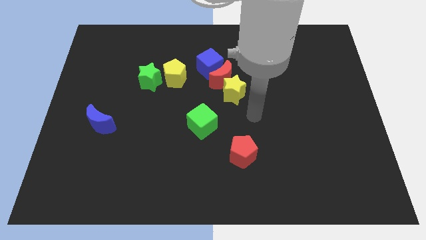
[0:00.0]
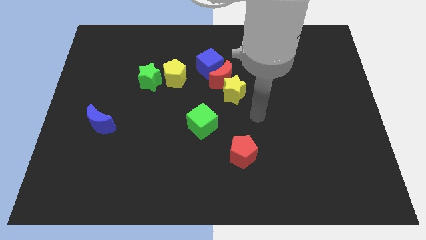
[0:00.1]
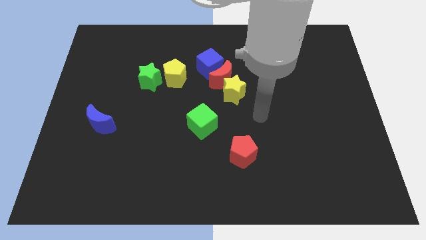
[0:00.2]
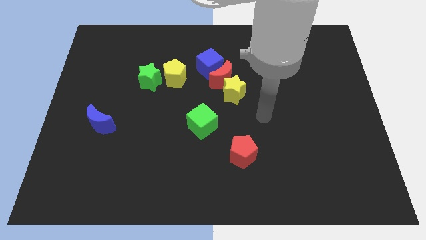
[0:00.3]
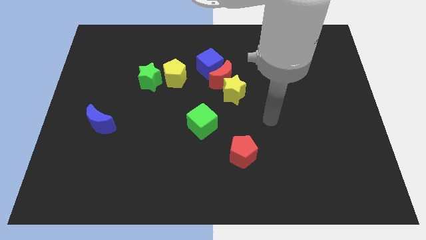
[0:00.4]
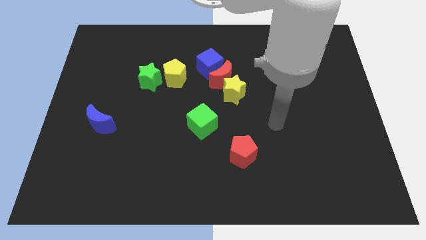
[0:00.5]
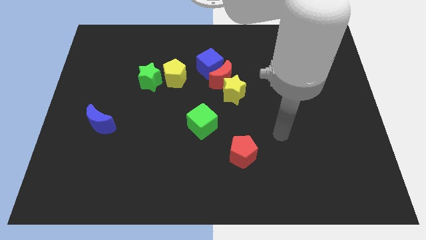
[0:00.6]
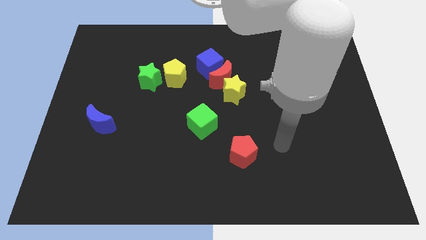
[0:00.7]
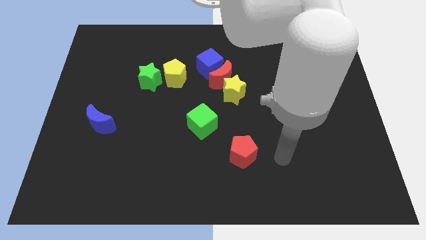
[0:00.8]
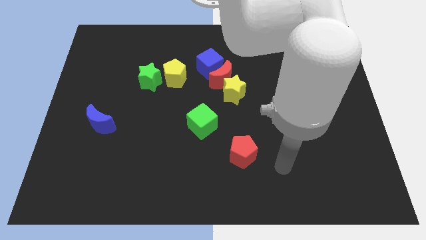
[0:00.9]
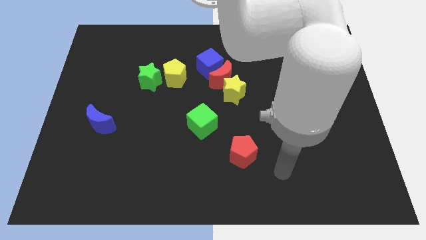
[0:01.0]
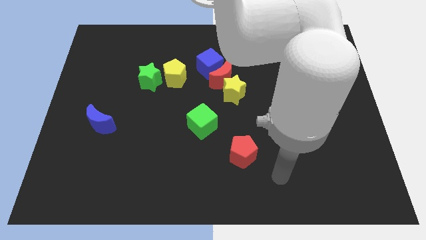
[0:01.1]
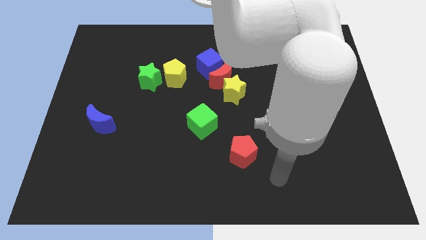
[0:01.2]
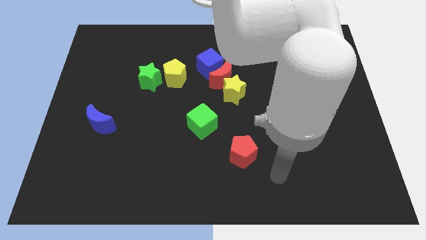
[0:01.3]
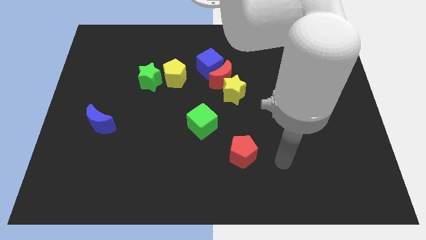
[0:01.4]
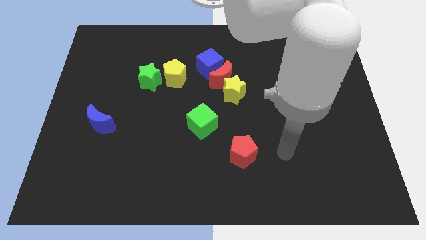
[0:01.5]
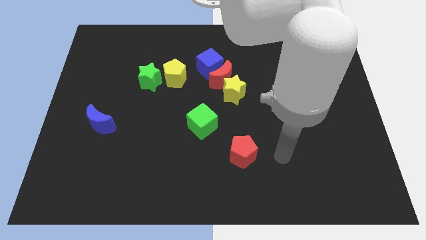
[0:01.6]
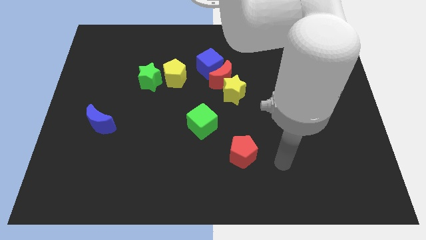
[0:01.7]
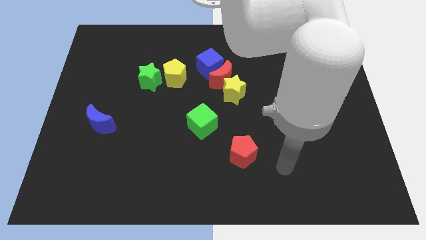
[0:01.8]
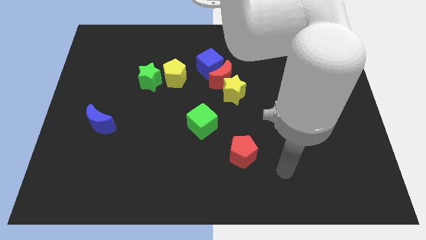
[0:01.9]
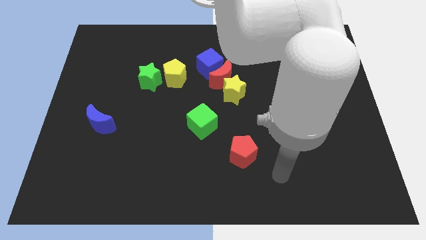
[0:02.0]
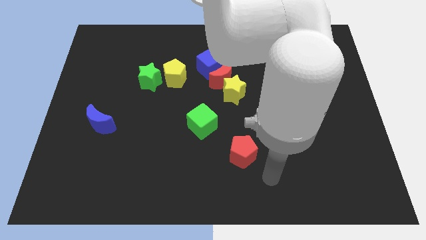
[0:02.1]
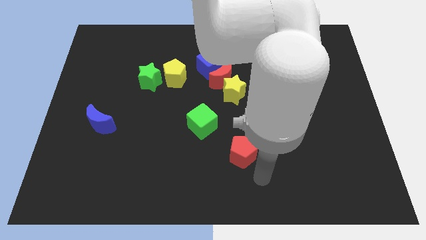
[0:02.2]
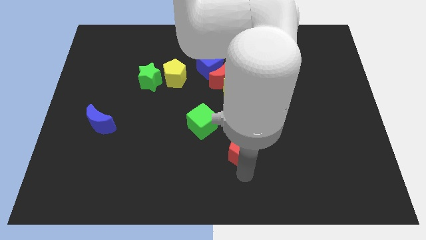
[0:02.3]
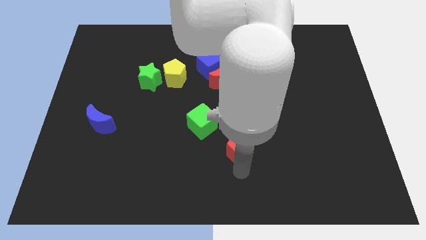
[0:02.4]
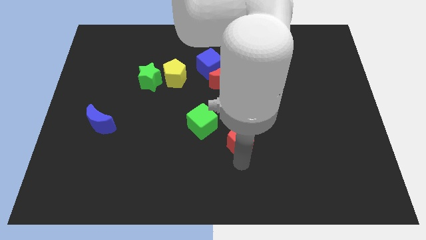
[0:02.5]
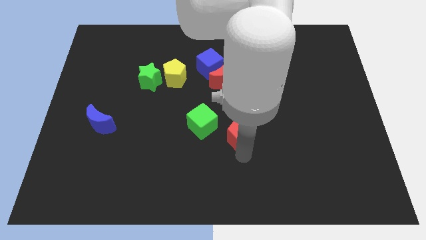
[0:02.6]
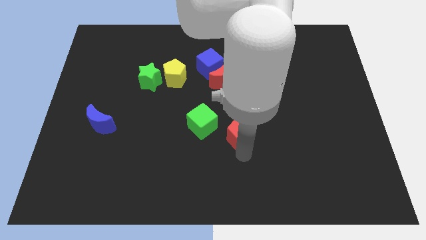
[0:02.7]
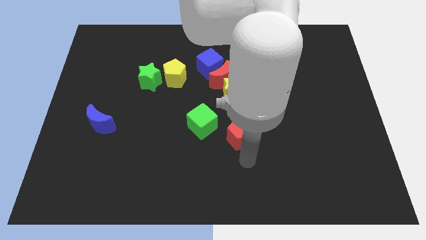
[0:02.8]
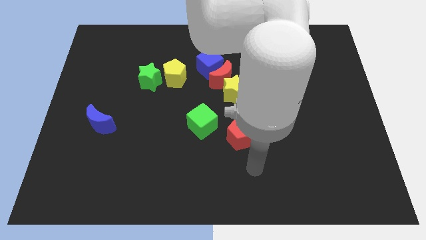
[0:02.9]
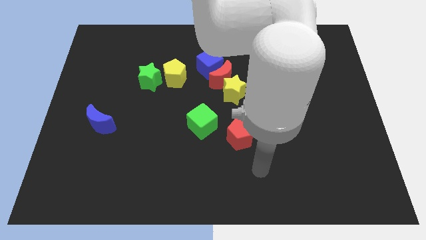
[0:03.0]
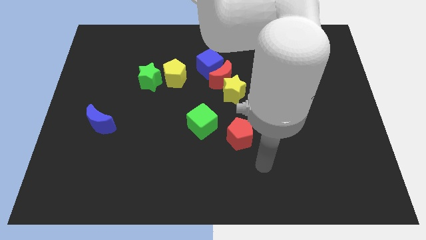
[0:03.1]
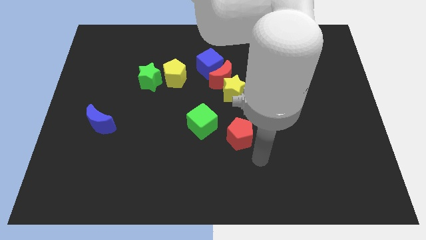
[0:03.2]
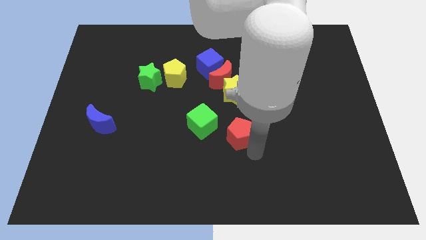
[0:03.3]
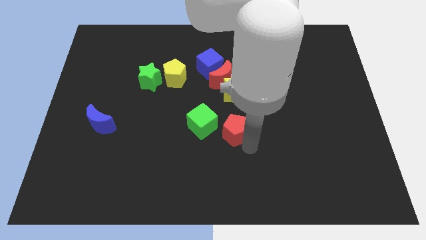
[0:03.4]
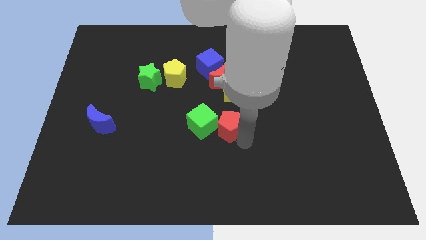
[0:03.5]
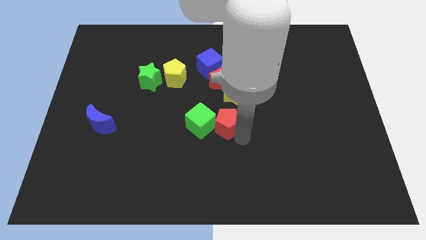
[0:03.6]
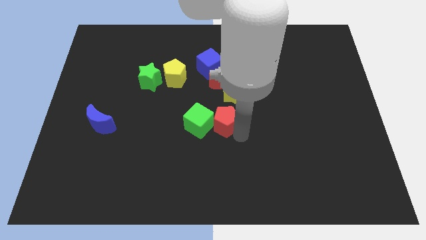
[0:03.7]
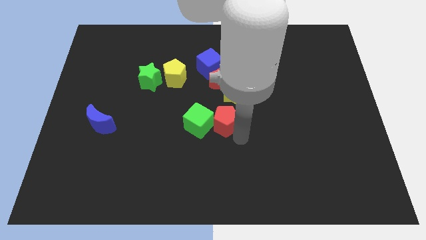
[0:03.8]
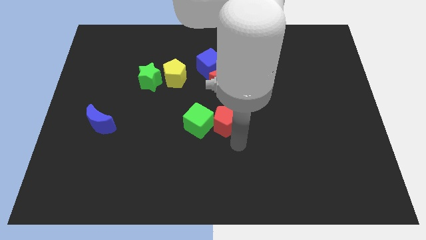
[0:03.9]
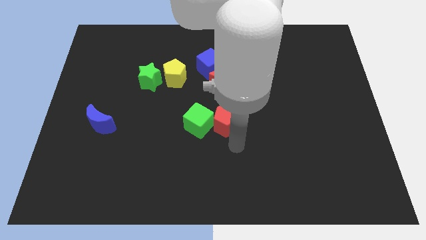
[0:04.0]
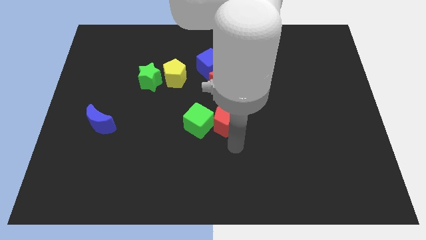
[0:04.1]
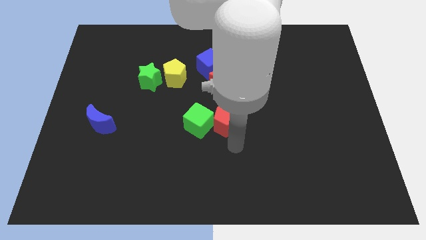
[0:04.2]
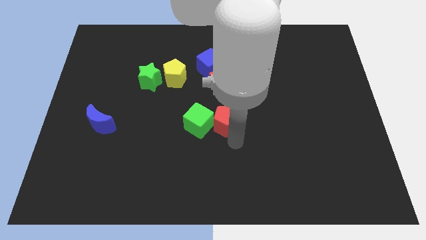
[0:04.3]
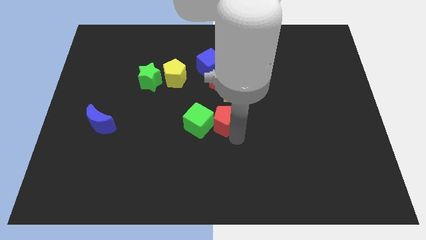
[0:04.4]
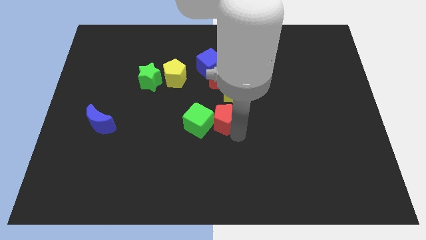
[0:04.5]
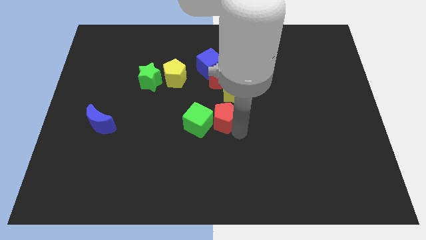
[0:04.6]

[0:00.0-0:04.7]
push the red pentagon into the green cube

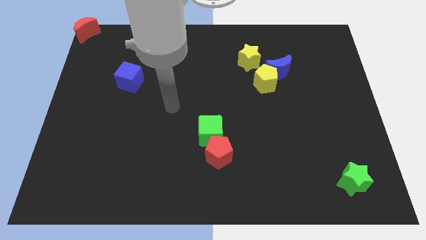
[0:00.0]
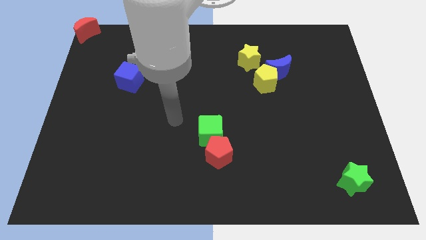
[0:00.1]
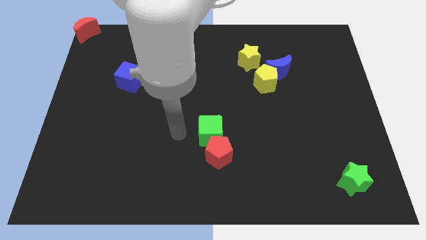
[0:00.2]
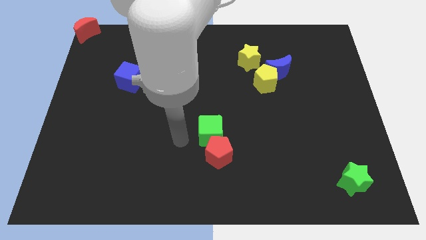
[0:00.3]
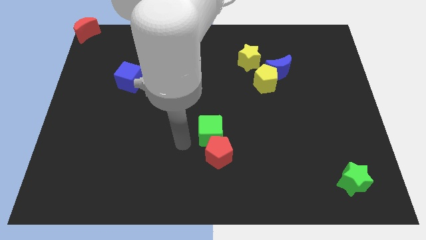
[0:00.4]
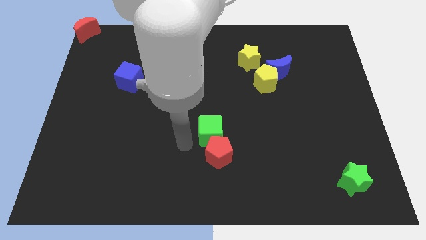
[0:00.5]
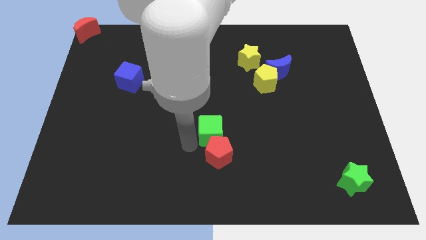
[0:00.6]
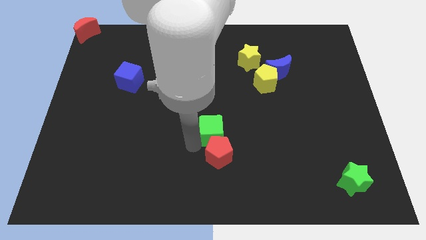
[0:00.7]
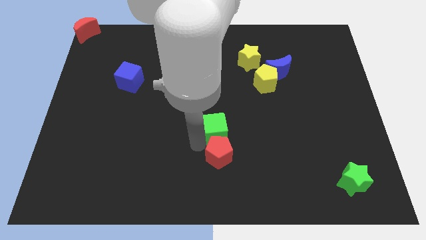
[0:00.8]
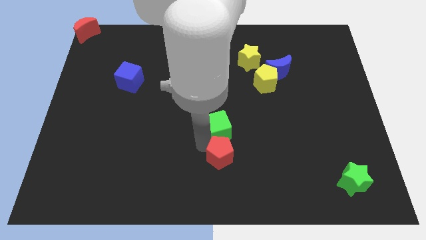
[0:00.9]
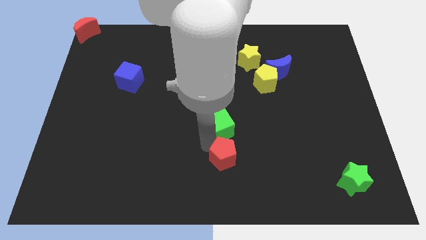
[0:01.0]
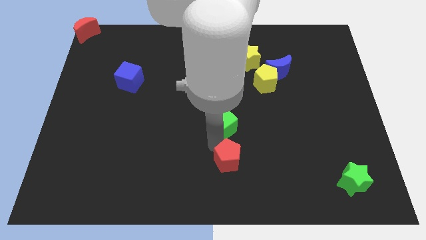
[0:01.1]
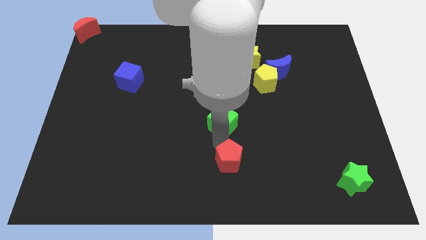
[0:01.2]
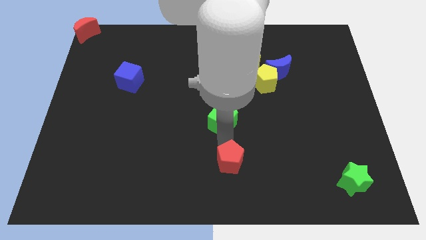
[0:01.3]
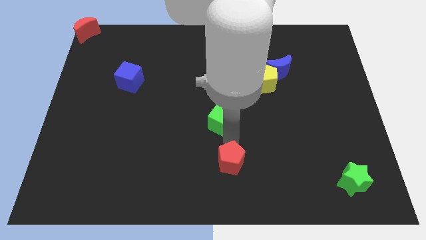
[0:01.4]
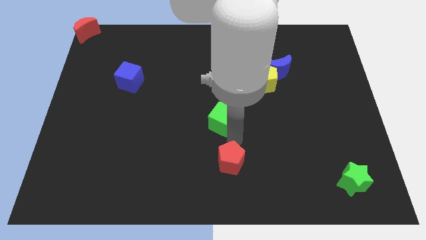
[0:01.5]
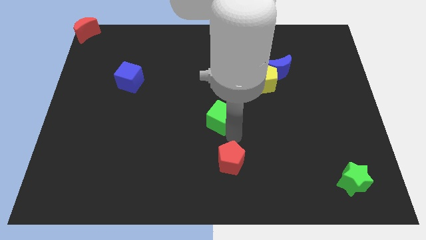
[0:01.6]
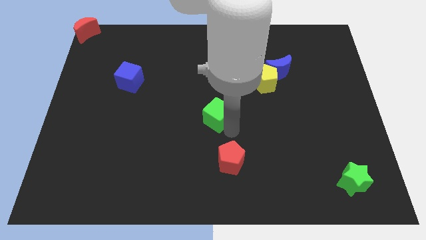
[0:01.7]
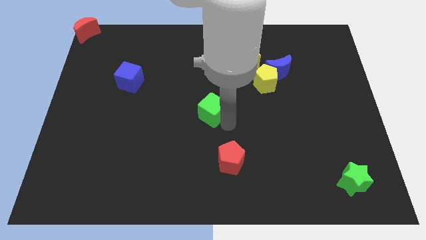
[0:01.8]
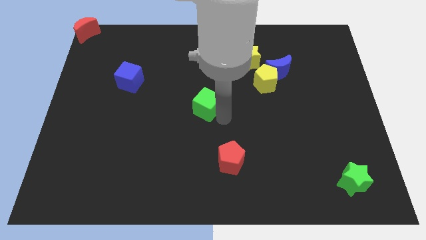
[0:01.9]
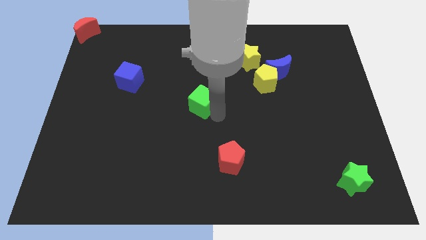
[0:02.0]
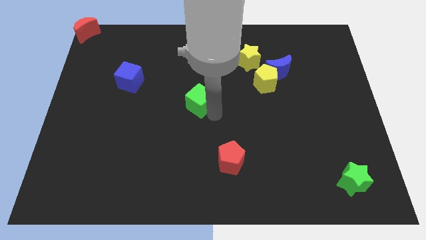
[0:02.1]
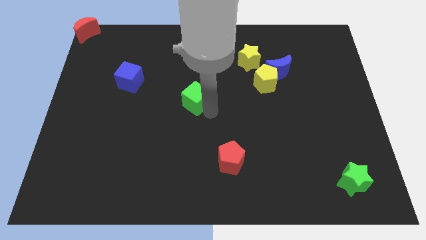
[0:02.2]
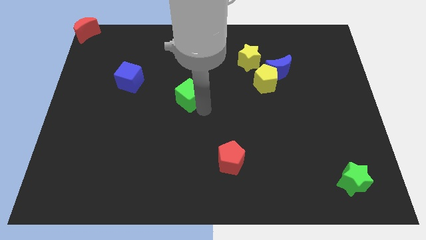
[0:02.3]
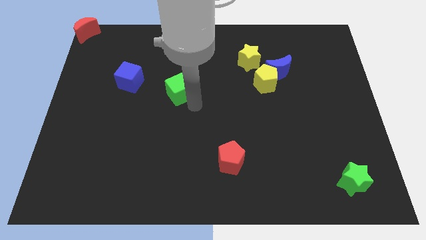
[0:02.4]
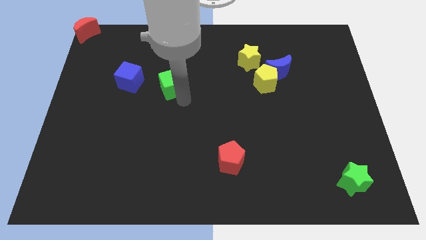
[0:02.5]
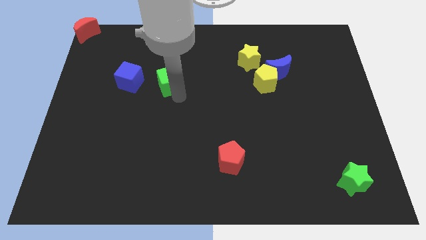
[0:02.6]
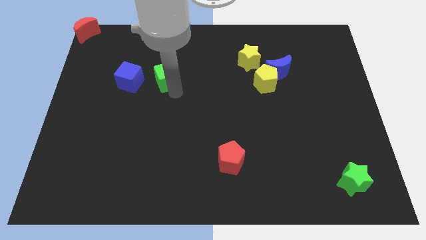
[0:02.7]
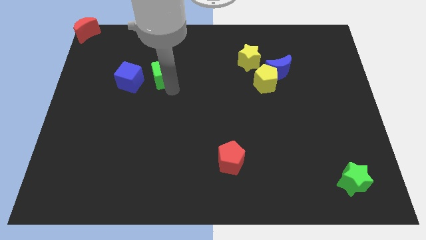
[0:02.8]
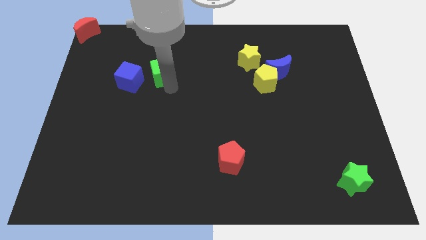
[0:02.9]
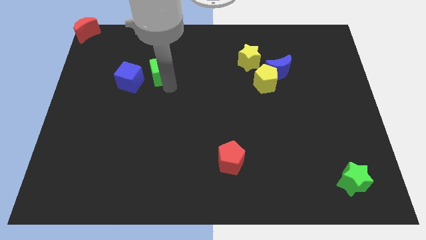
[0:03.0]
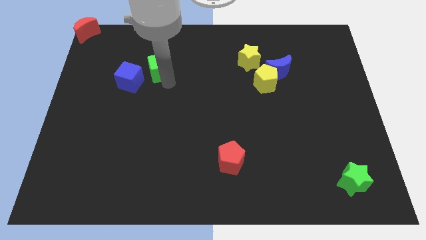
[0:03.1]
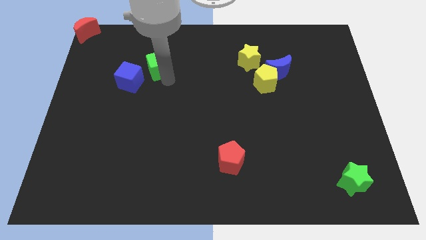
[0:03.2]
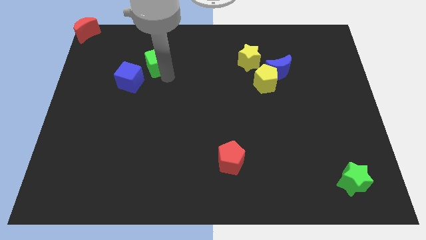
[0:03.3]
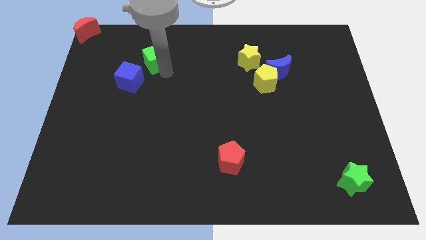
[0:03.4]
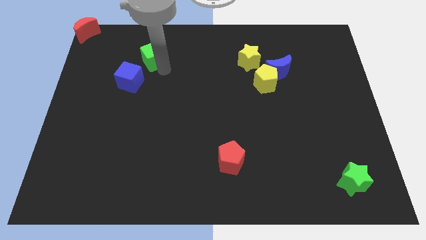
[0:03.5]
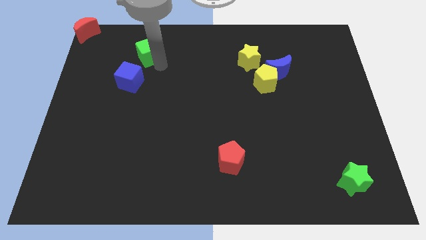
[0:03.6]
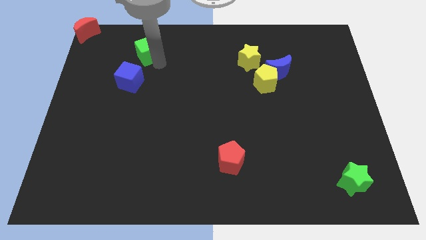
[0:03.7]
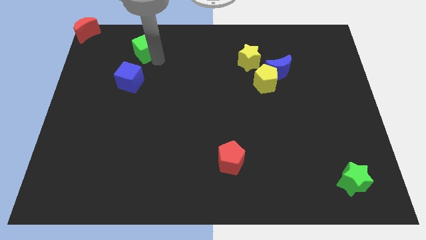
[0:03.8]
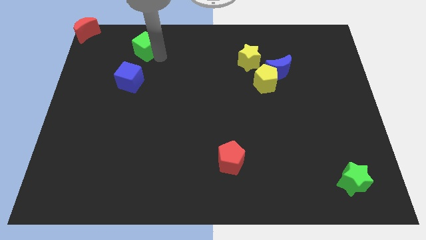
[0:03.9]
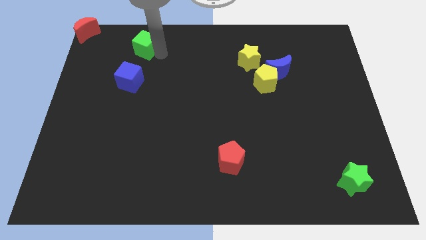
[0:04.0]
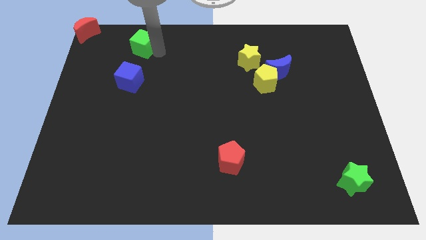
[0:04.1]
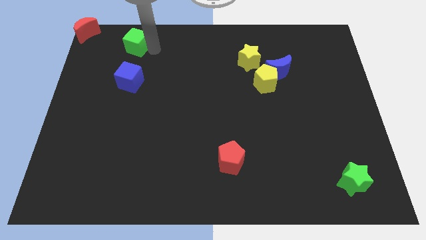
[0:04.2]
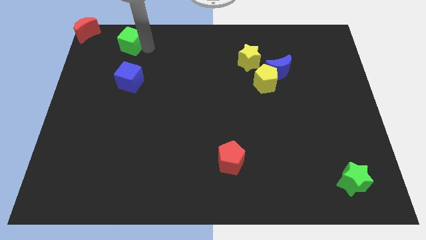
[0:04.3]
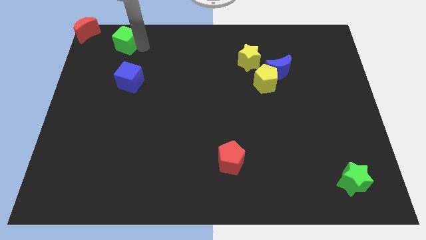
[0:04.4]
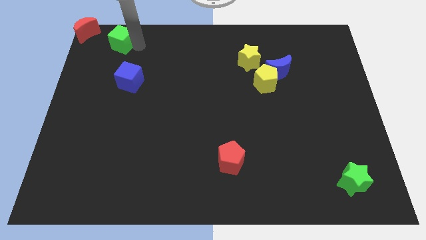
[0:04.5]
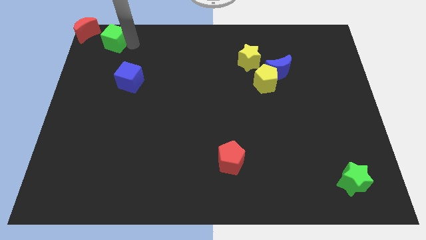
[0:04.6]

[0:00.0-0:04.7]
separate the green cube from the red pentagon
